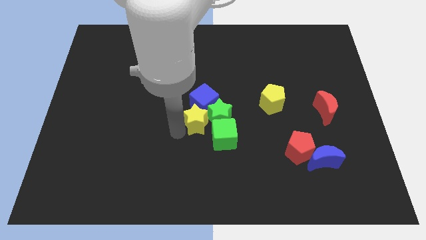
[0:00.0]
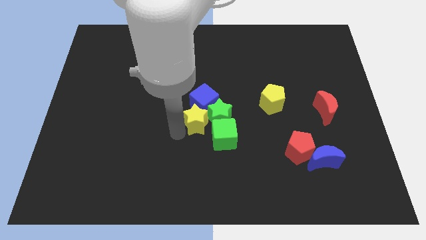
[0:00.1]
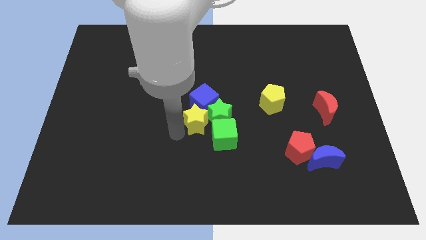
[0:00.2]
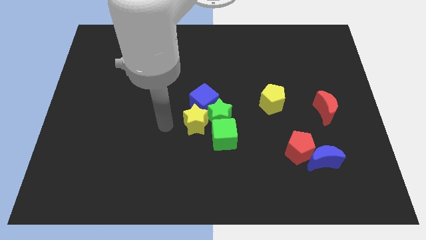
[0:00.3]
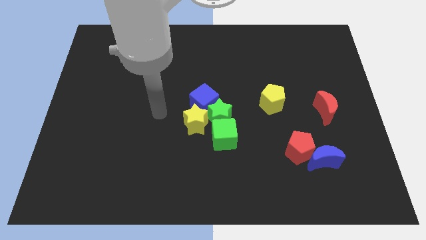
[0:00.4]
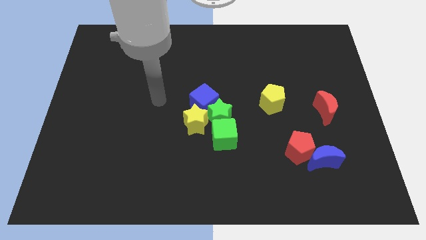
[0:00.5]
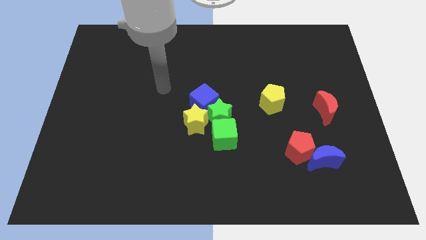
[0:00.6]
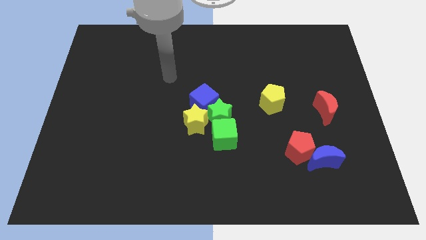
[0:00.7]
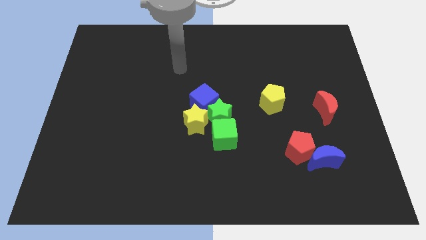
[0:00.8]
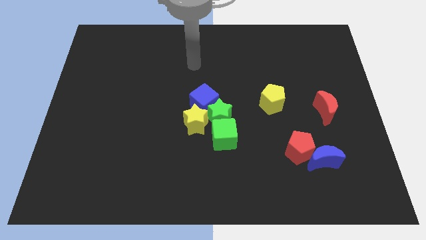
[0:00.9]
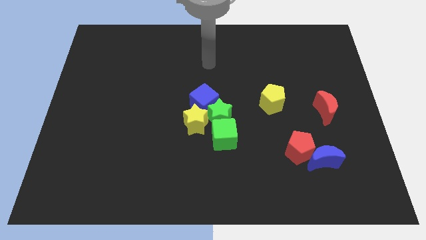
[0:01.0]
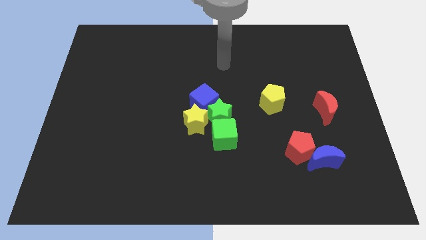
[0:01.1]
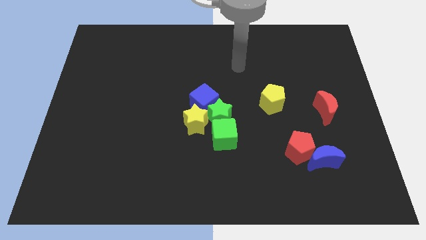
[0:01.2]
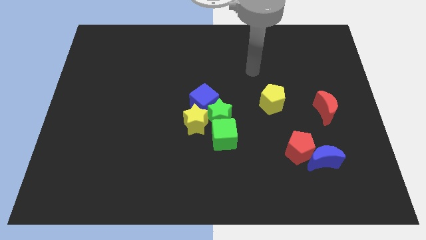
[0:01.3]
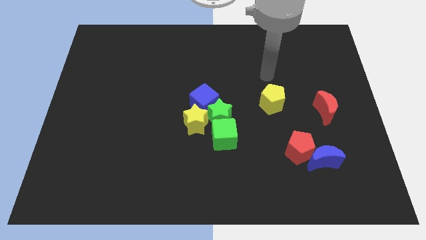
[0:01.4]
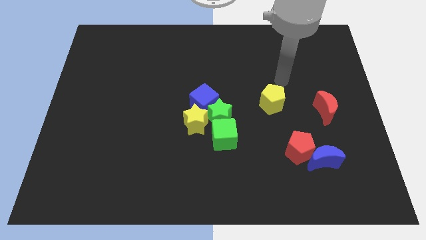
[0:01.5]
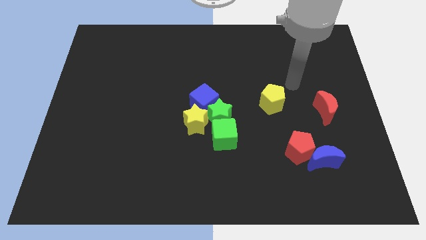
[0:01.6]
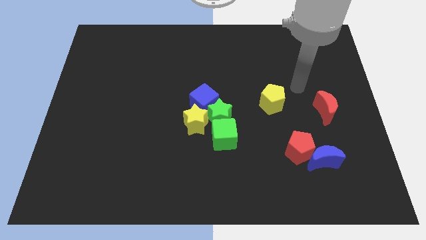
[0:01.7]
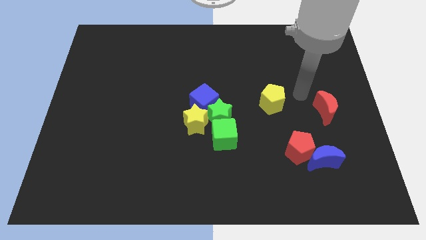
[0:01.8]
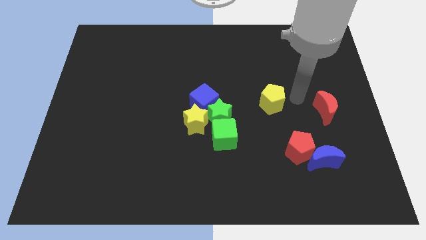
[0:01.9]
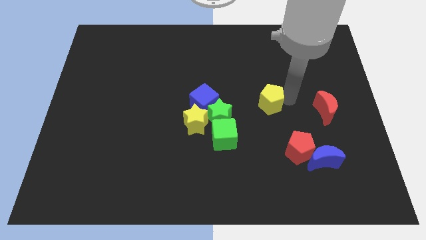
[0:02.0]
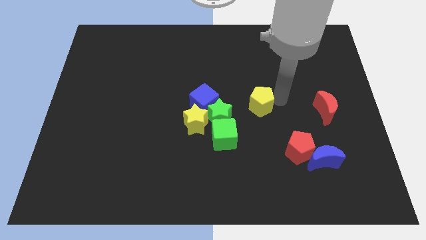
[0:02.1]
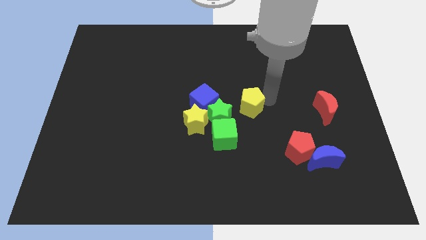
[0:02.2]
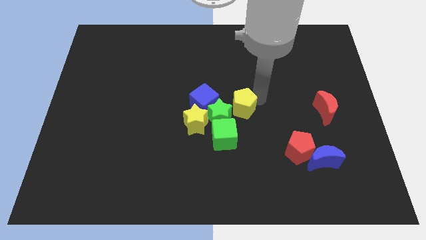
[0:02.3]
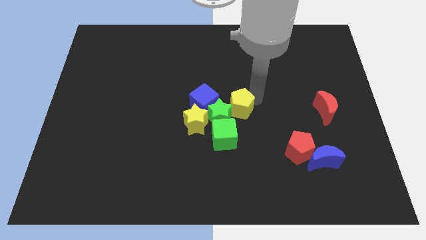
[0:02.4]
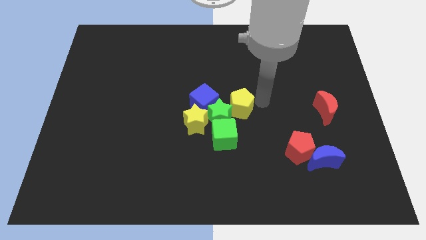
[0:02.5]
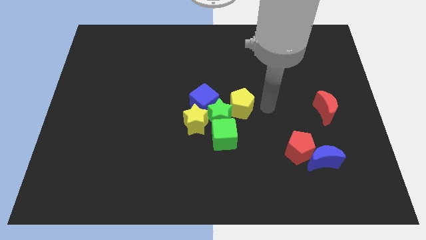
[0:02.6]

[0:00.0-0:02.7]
slide the yellow pentagon into the green star

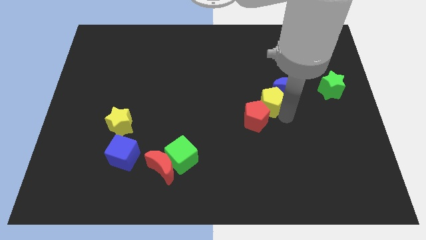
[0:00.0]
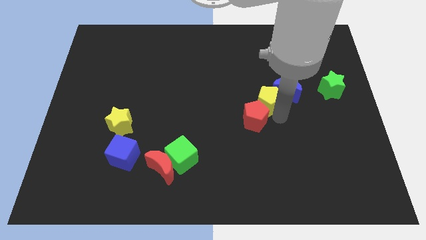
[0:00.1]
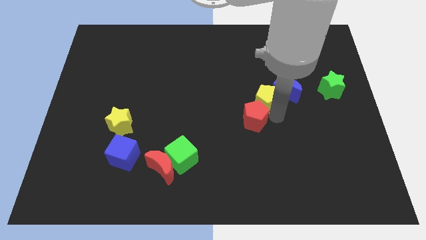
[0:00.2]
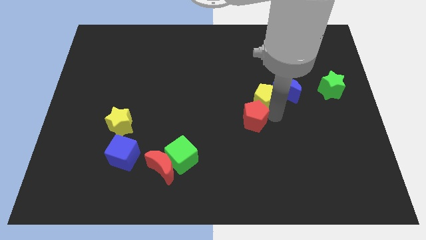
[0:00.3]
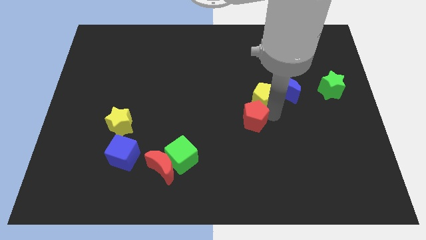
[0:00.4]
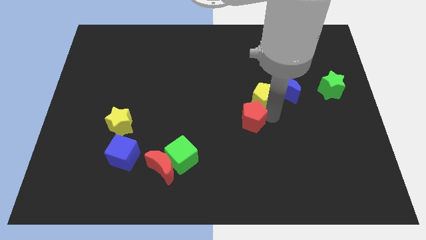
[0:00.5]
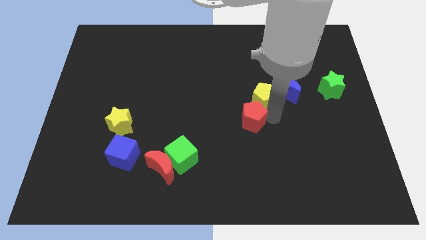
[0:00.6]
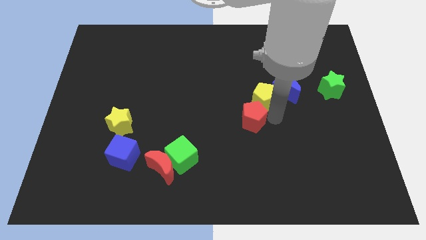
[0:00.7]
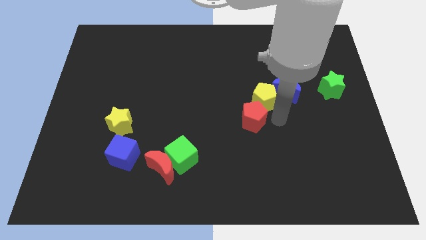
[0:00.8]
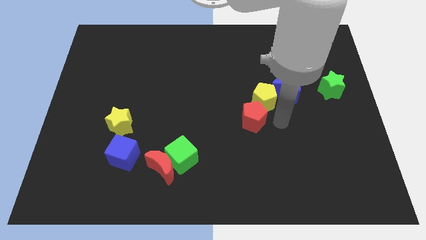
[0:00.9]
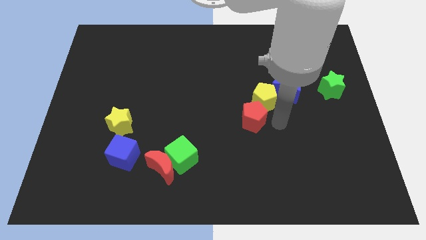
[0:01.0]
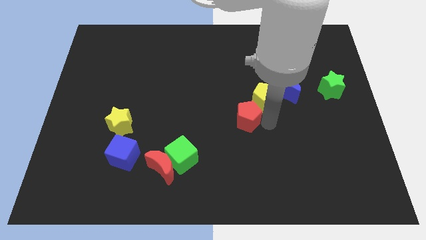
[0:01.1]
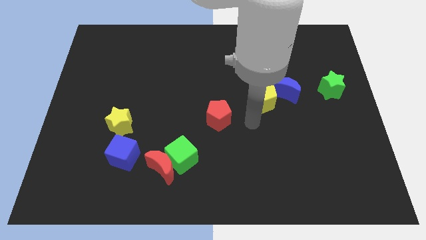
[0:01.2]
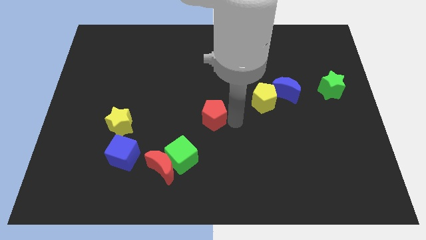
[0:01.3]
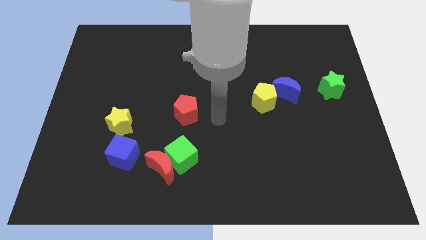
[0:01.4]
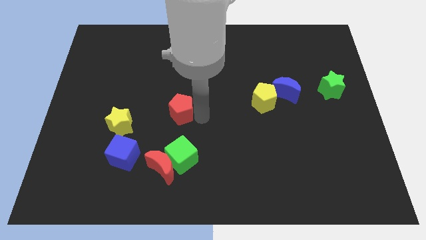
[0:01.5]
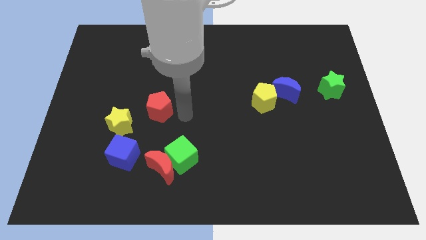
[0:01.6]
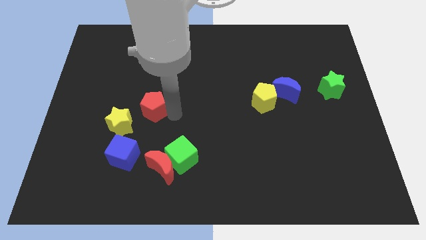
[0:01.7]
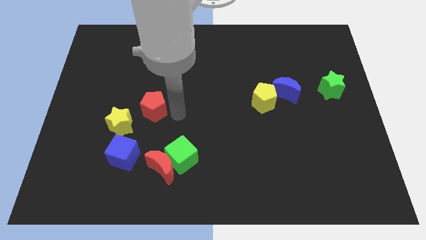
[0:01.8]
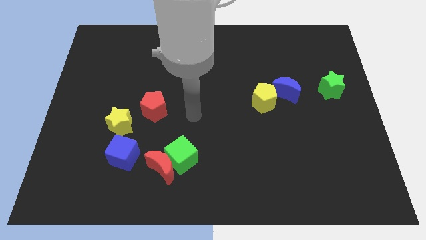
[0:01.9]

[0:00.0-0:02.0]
separate the red pentagon and yellow star

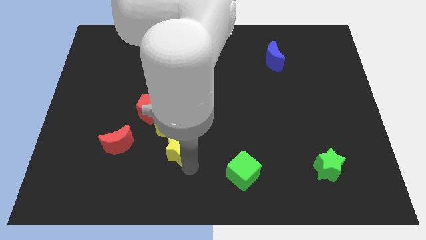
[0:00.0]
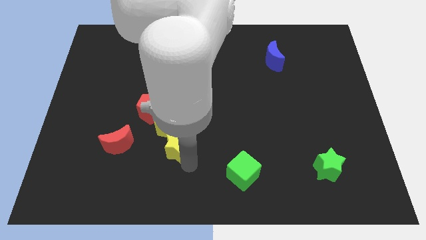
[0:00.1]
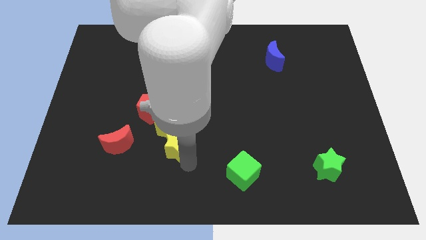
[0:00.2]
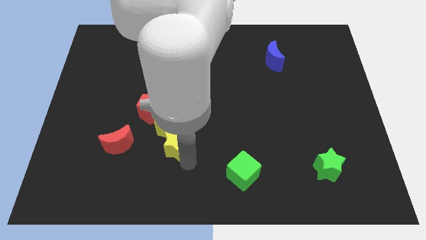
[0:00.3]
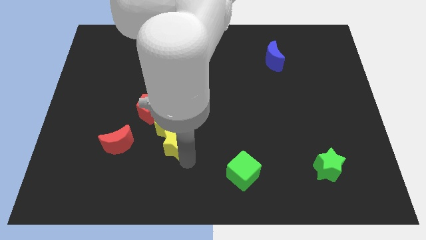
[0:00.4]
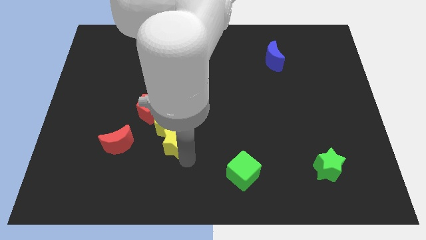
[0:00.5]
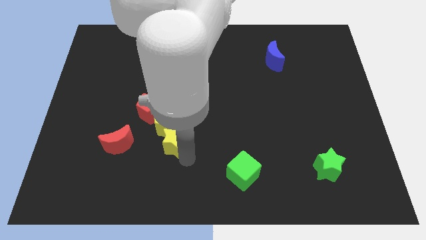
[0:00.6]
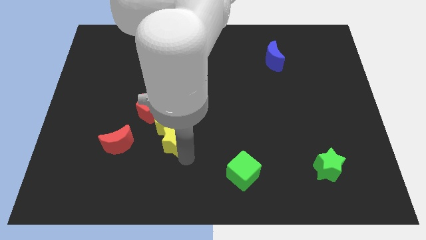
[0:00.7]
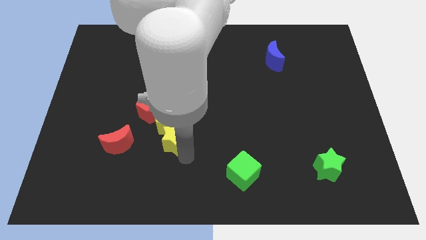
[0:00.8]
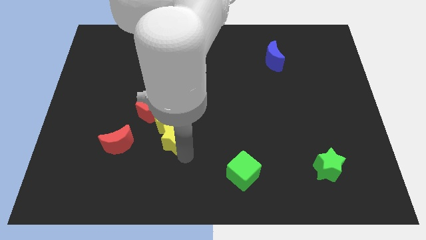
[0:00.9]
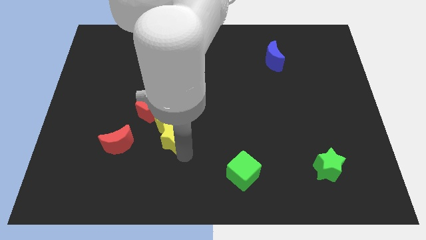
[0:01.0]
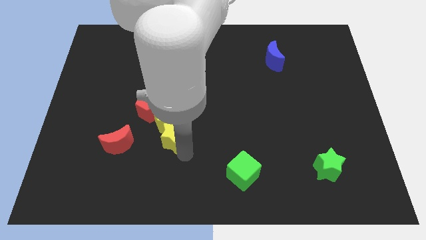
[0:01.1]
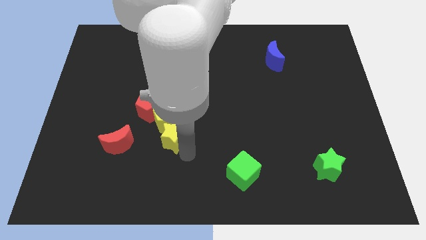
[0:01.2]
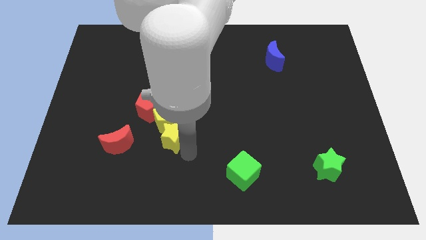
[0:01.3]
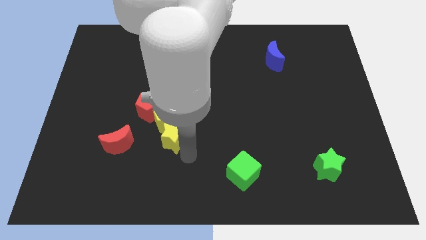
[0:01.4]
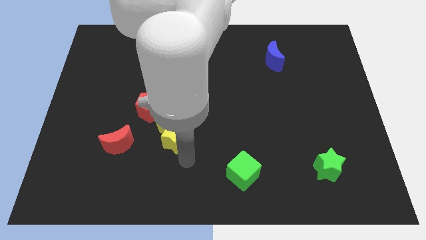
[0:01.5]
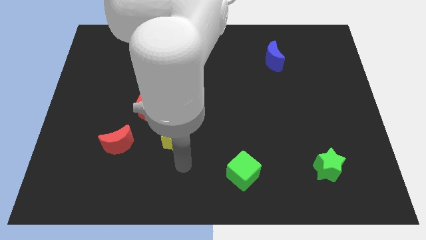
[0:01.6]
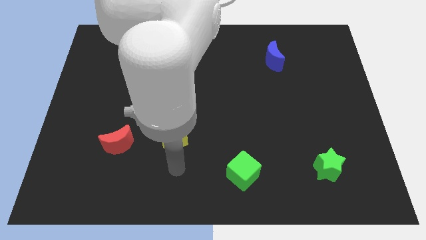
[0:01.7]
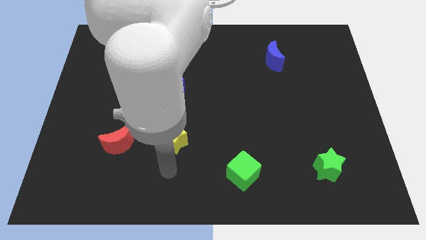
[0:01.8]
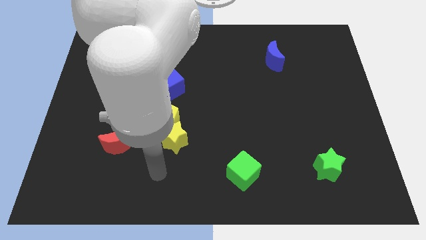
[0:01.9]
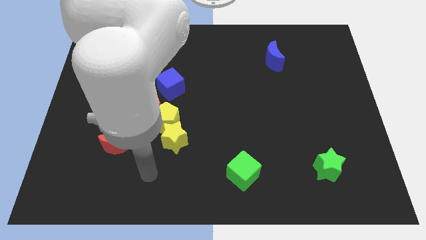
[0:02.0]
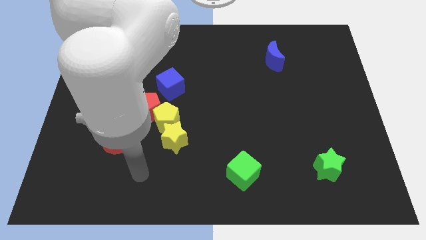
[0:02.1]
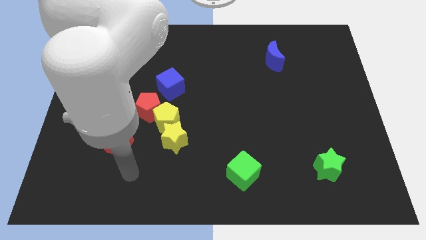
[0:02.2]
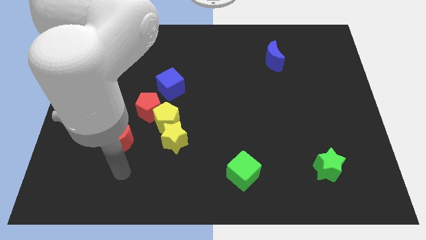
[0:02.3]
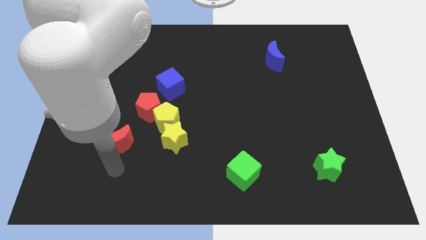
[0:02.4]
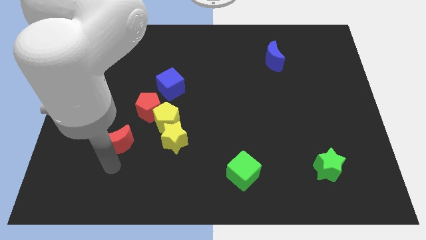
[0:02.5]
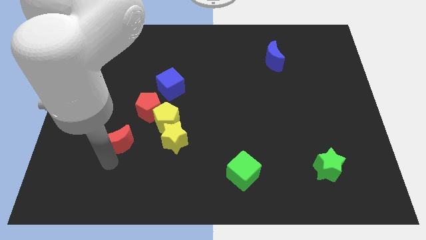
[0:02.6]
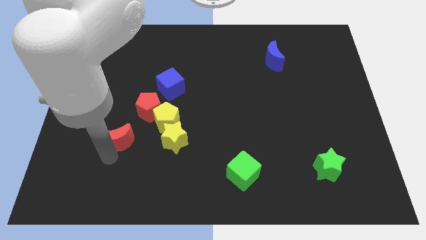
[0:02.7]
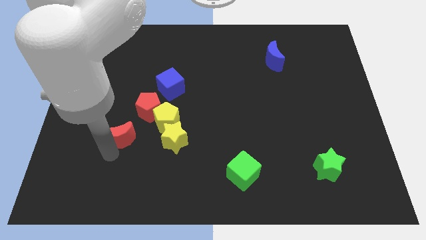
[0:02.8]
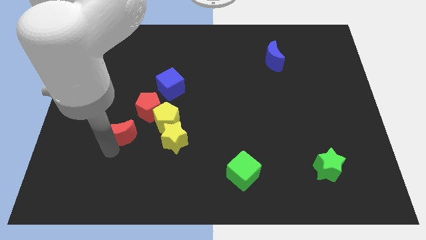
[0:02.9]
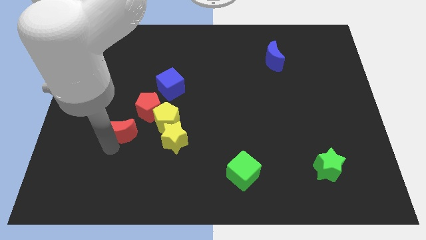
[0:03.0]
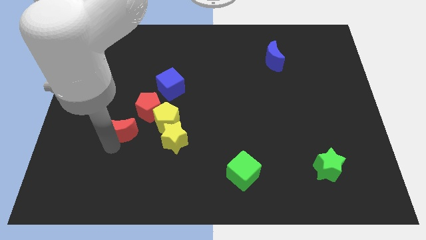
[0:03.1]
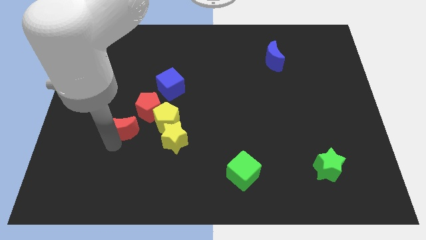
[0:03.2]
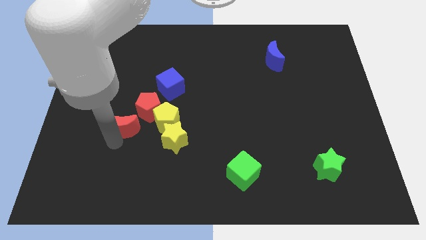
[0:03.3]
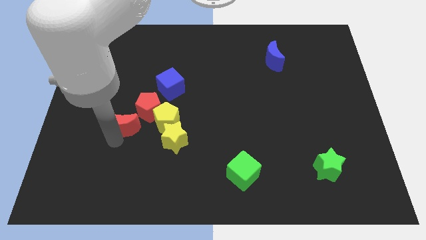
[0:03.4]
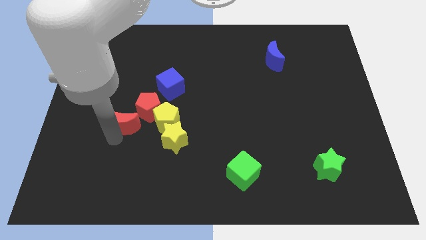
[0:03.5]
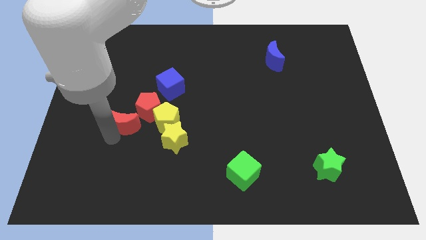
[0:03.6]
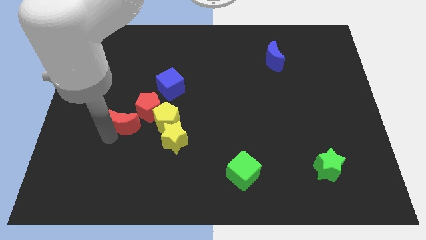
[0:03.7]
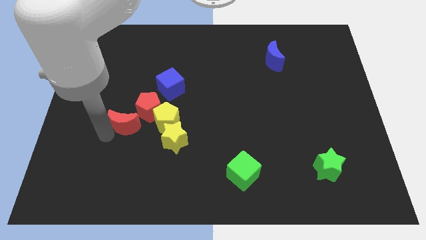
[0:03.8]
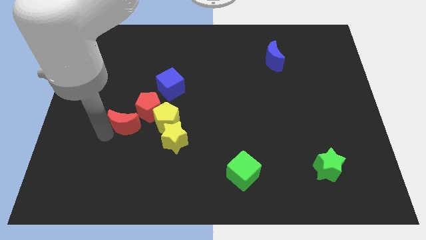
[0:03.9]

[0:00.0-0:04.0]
push the red moon to the left side of the red pentagon

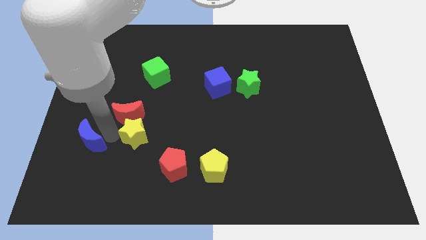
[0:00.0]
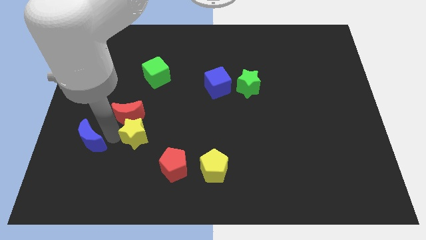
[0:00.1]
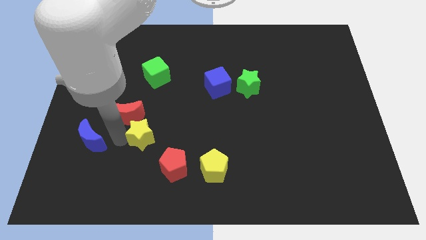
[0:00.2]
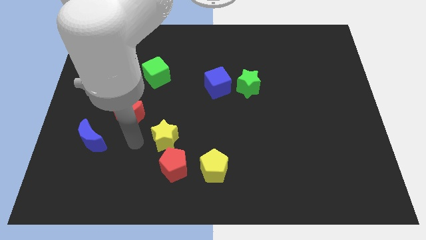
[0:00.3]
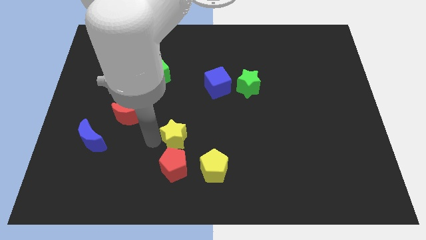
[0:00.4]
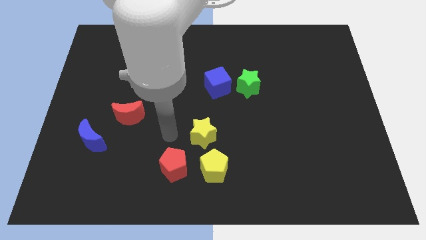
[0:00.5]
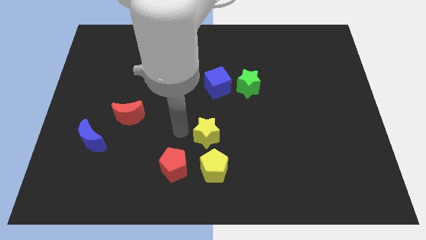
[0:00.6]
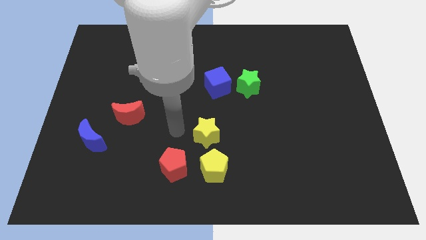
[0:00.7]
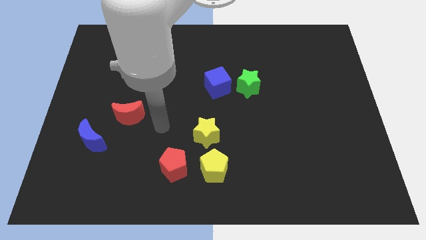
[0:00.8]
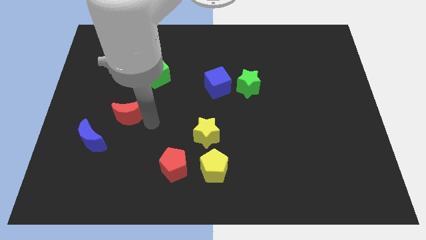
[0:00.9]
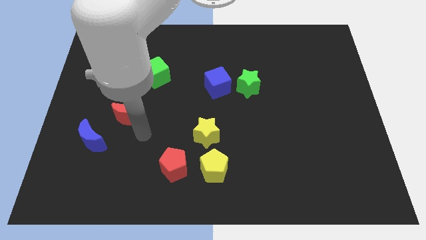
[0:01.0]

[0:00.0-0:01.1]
separate yellow star from red moon
